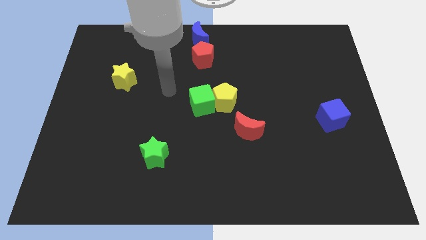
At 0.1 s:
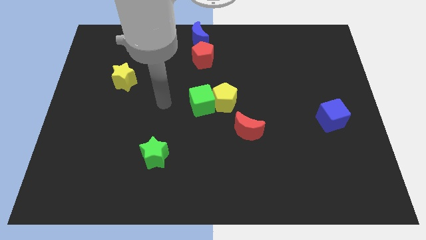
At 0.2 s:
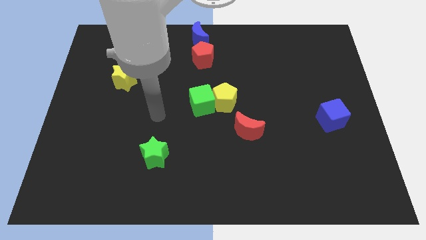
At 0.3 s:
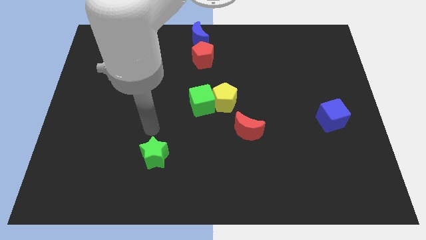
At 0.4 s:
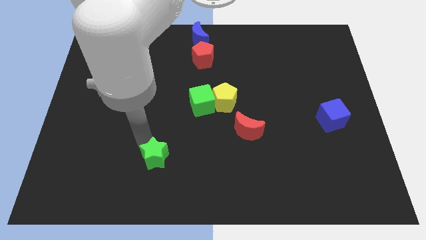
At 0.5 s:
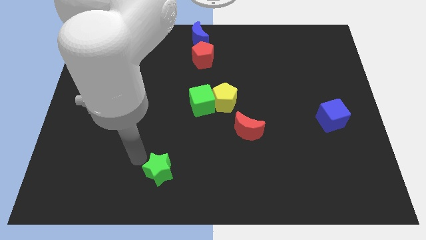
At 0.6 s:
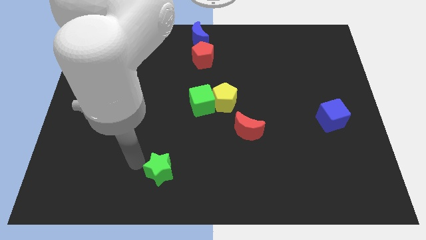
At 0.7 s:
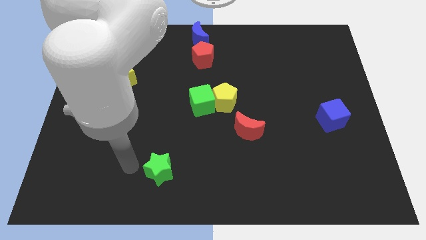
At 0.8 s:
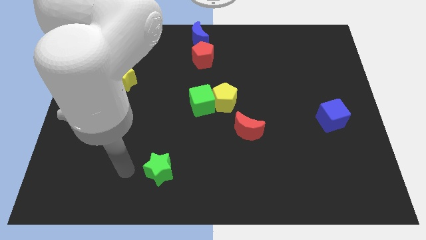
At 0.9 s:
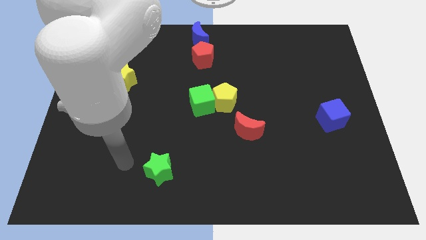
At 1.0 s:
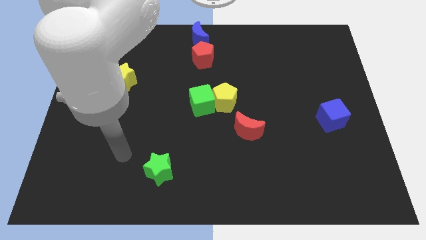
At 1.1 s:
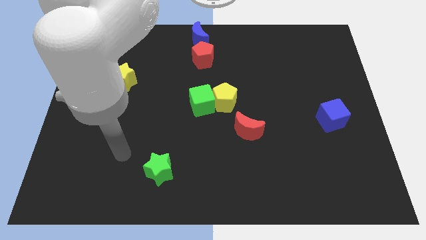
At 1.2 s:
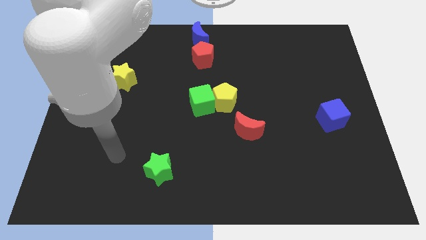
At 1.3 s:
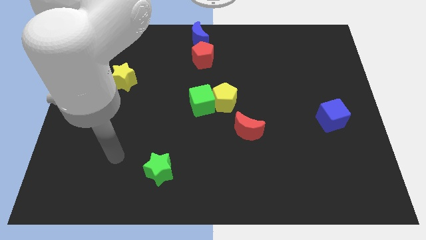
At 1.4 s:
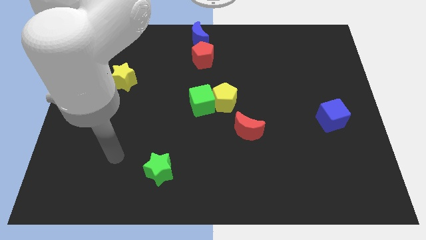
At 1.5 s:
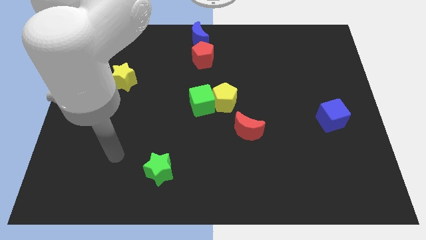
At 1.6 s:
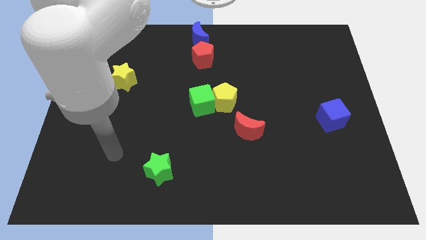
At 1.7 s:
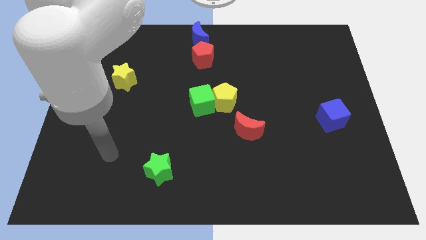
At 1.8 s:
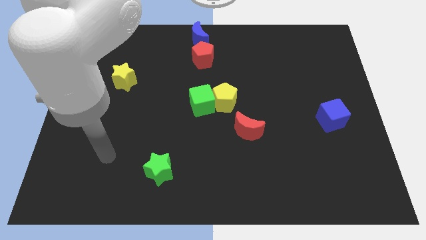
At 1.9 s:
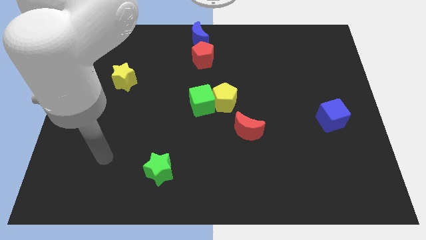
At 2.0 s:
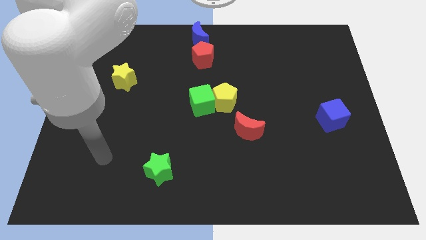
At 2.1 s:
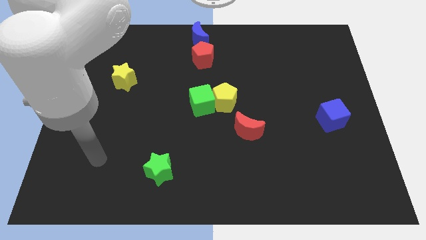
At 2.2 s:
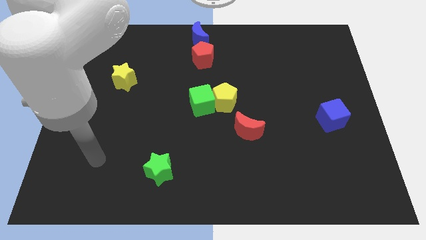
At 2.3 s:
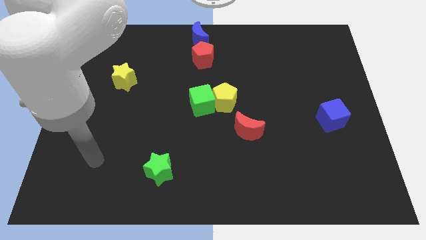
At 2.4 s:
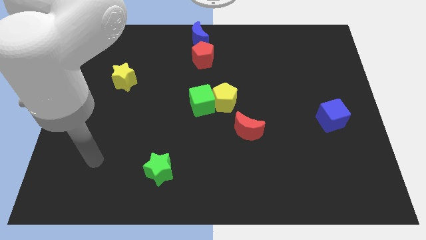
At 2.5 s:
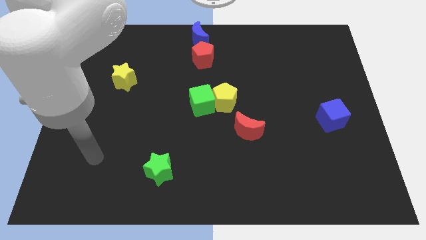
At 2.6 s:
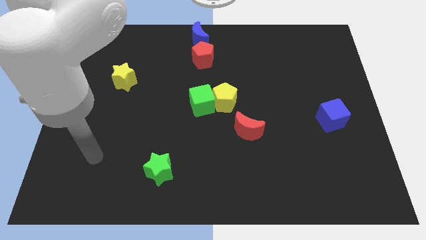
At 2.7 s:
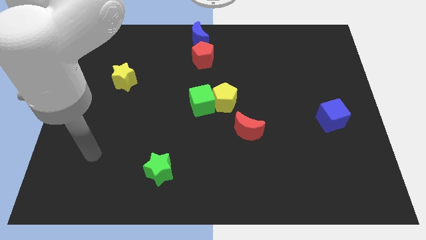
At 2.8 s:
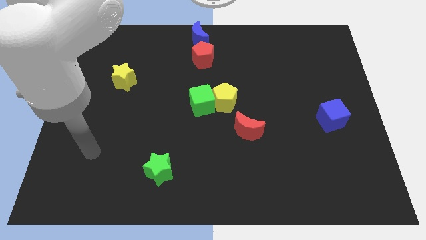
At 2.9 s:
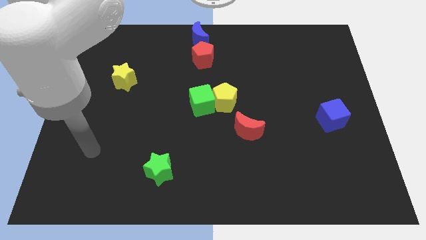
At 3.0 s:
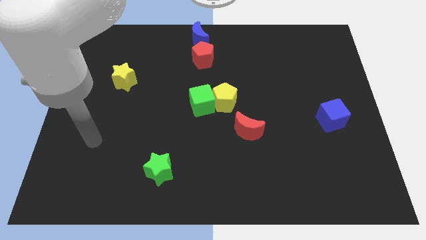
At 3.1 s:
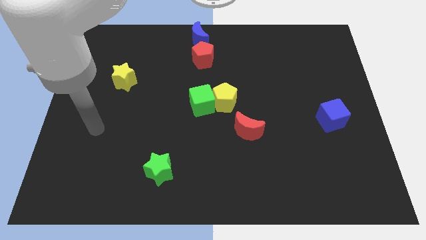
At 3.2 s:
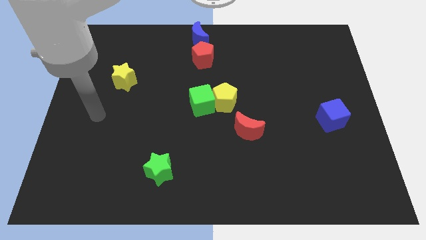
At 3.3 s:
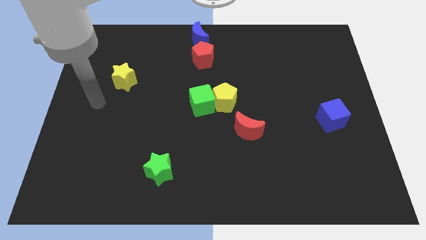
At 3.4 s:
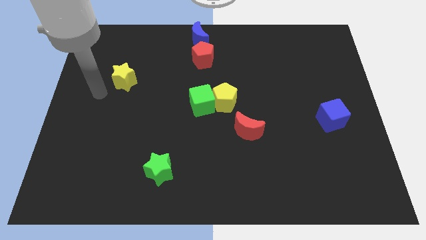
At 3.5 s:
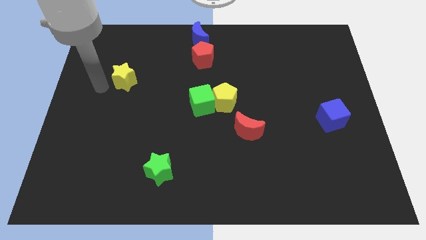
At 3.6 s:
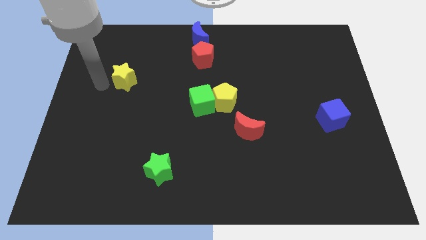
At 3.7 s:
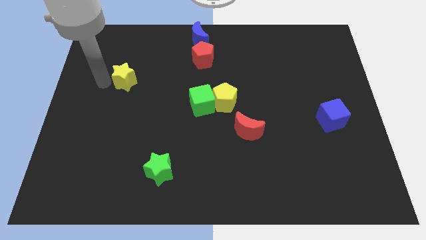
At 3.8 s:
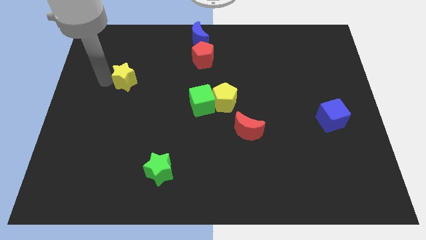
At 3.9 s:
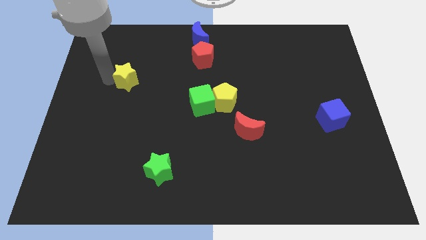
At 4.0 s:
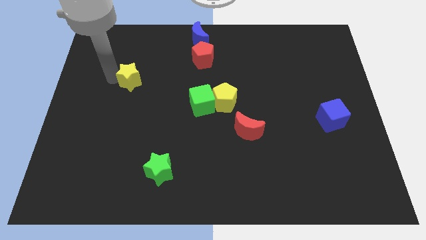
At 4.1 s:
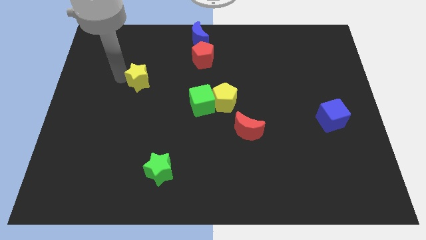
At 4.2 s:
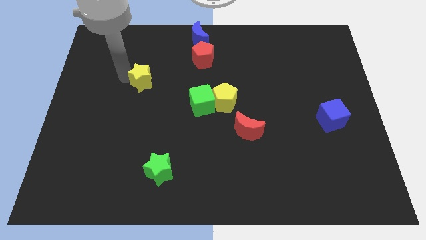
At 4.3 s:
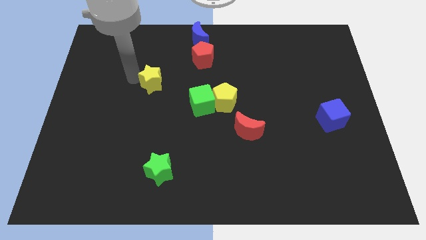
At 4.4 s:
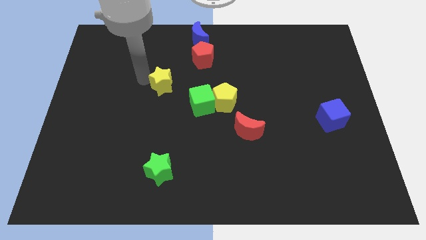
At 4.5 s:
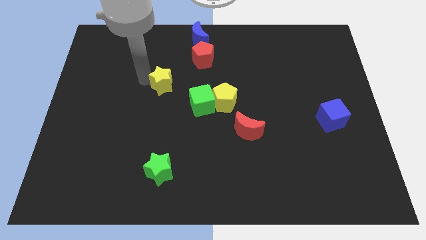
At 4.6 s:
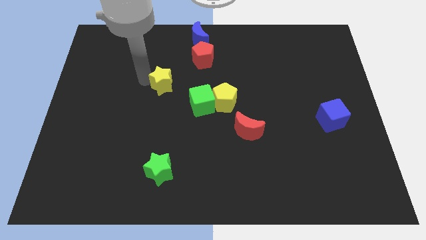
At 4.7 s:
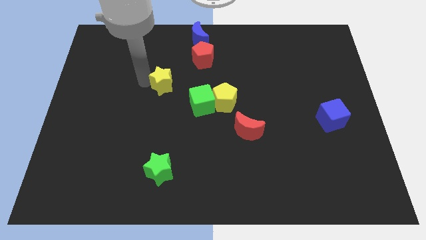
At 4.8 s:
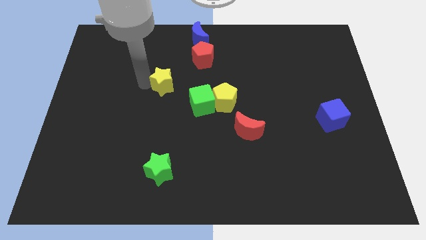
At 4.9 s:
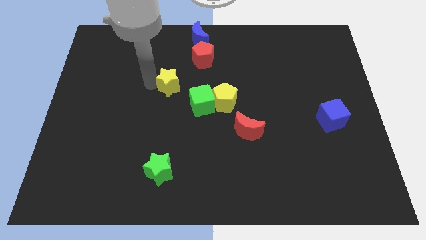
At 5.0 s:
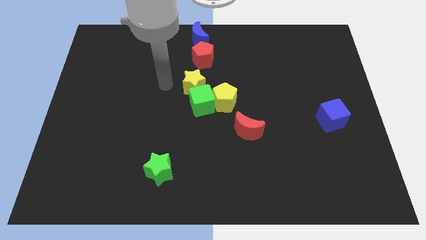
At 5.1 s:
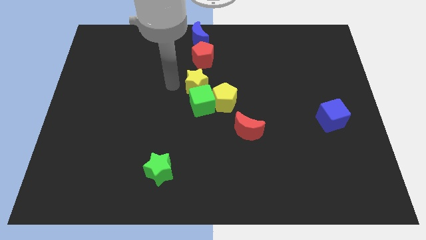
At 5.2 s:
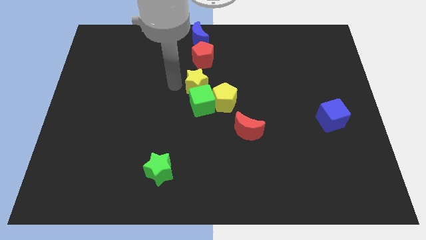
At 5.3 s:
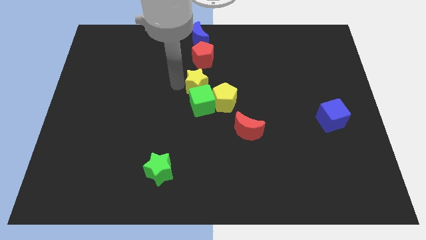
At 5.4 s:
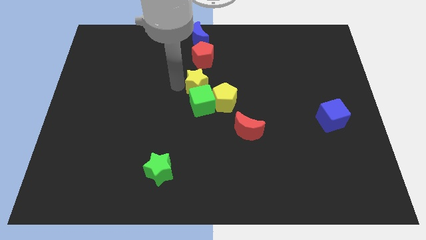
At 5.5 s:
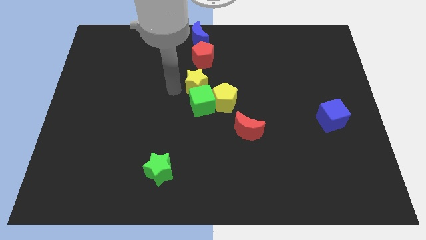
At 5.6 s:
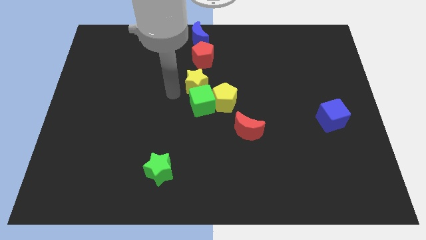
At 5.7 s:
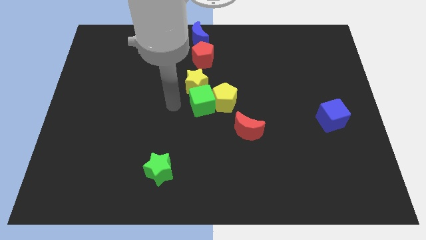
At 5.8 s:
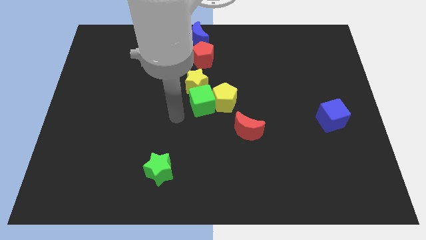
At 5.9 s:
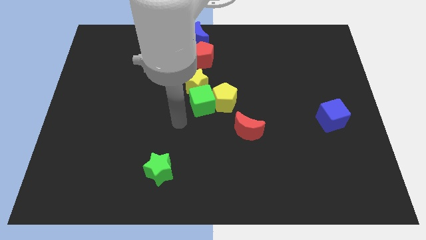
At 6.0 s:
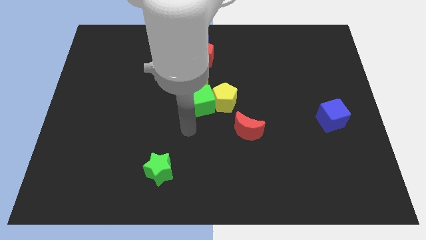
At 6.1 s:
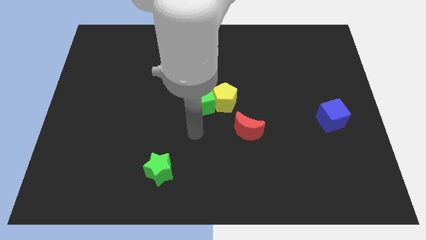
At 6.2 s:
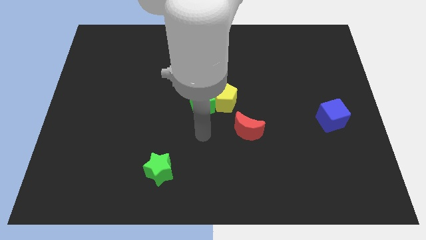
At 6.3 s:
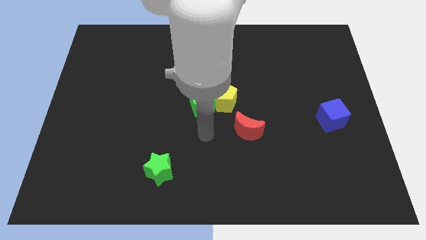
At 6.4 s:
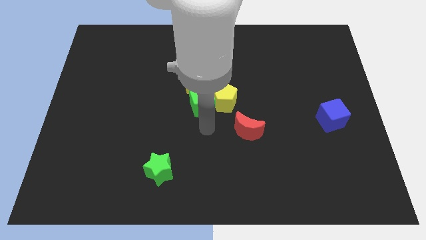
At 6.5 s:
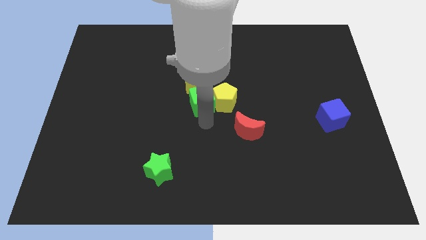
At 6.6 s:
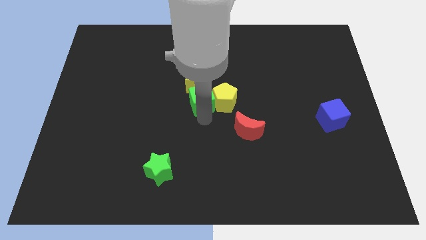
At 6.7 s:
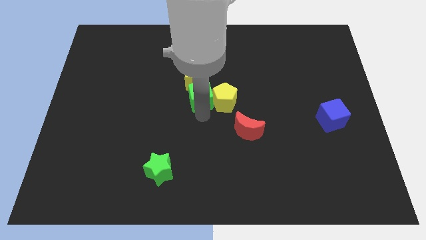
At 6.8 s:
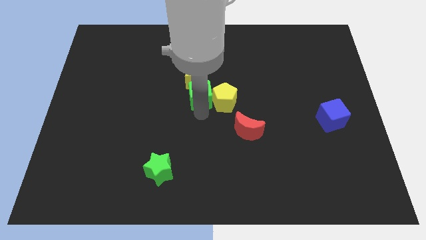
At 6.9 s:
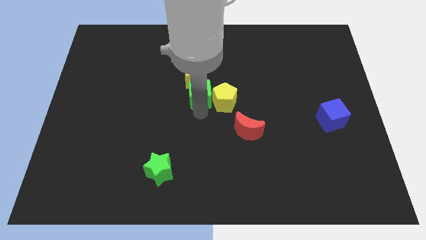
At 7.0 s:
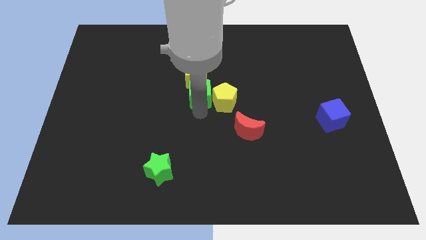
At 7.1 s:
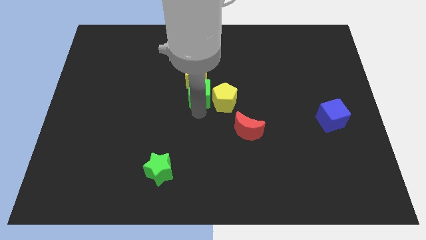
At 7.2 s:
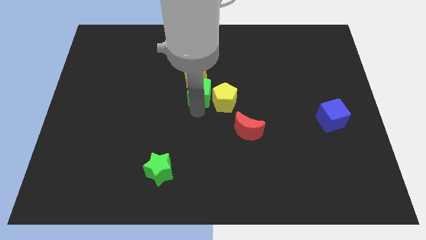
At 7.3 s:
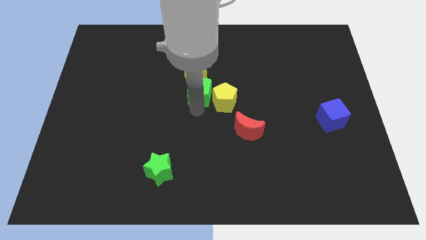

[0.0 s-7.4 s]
move the yellow star to top of the green cube

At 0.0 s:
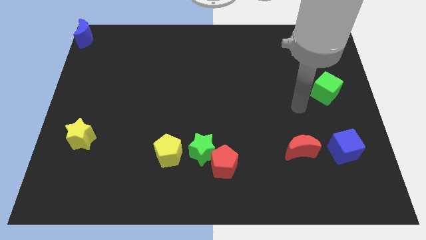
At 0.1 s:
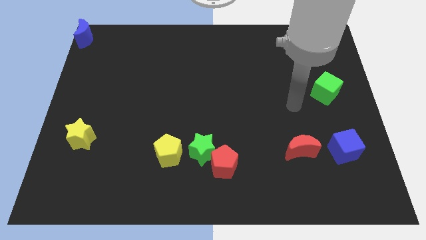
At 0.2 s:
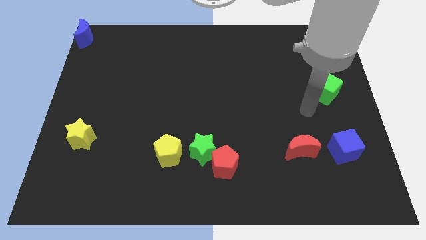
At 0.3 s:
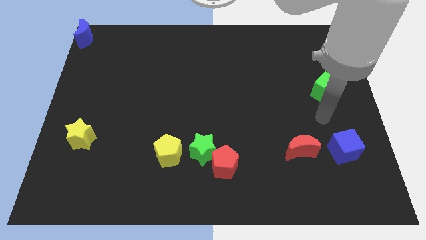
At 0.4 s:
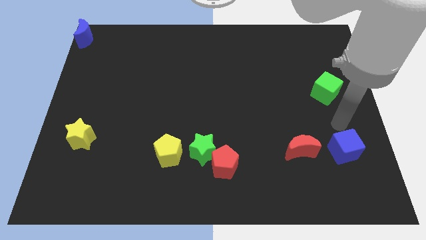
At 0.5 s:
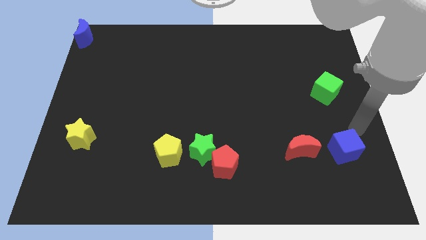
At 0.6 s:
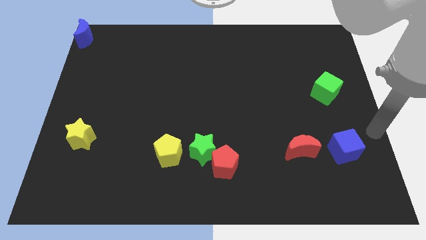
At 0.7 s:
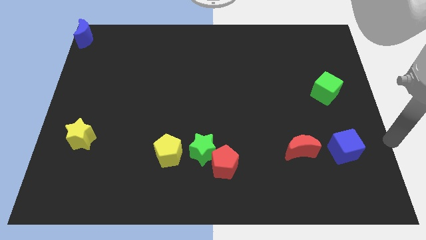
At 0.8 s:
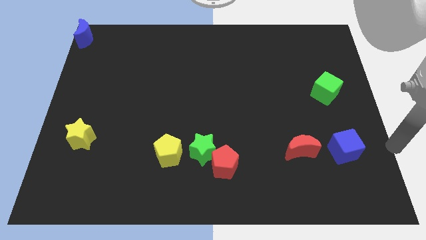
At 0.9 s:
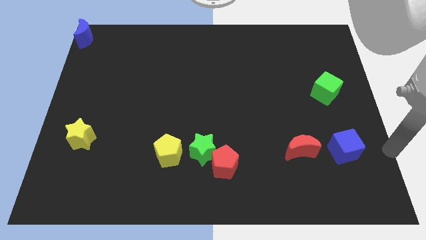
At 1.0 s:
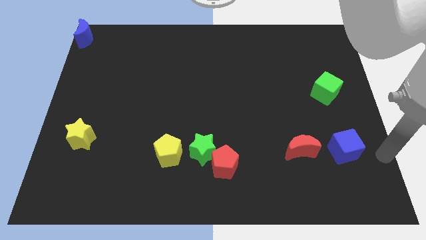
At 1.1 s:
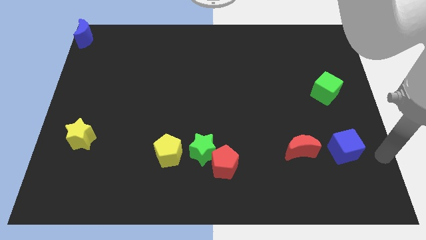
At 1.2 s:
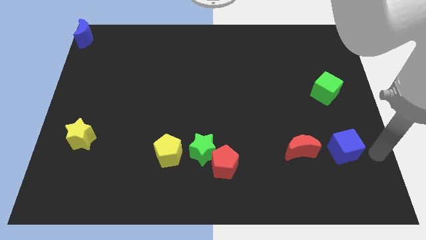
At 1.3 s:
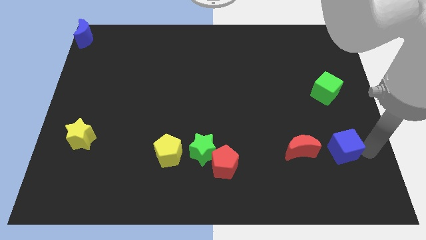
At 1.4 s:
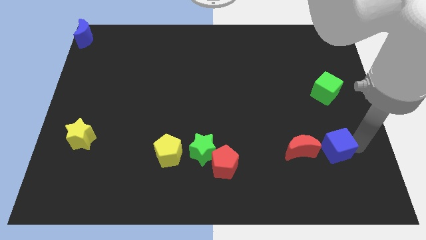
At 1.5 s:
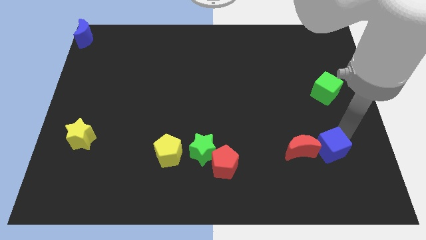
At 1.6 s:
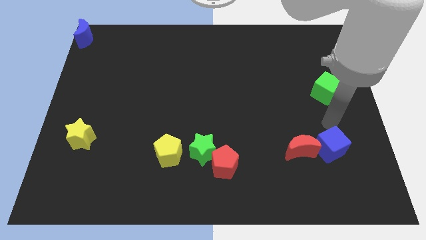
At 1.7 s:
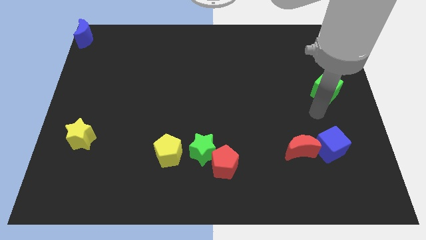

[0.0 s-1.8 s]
push the blue cube closer to the red moon
